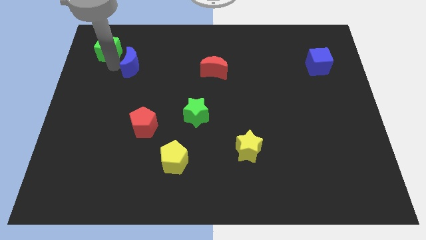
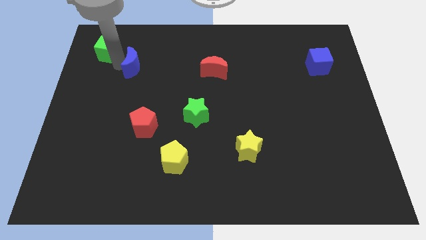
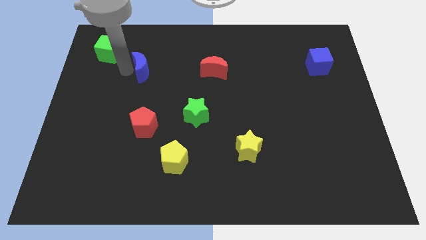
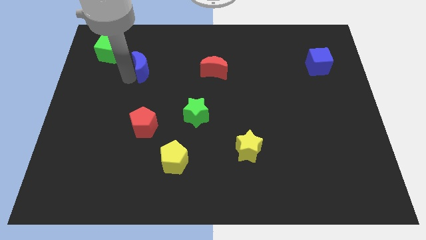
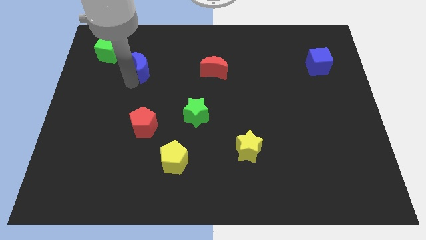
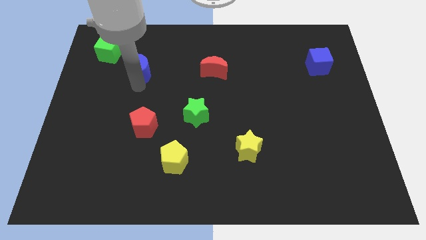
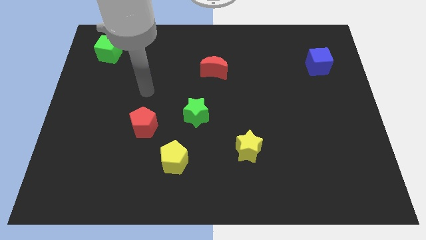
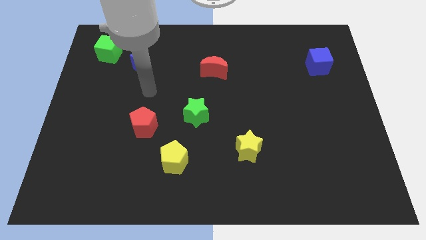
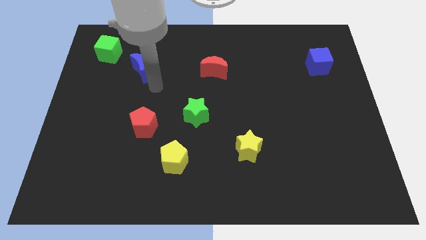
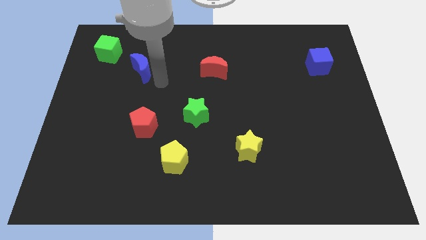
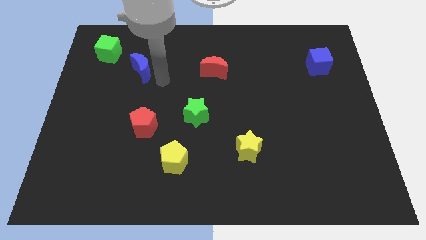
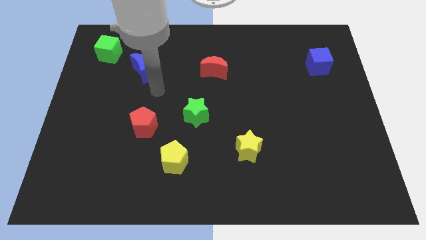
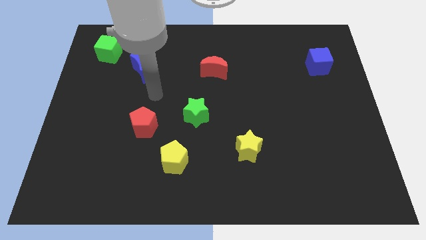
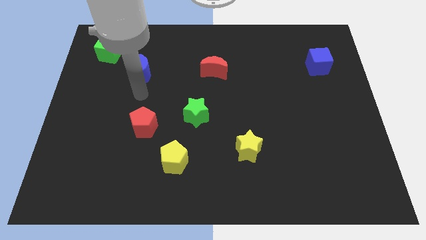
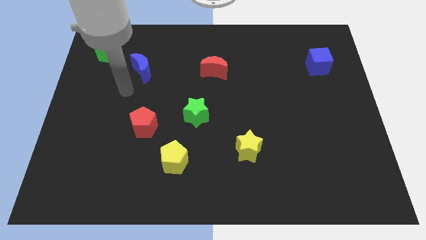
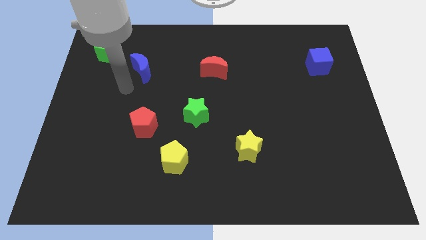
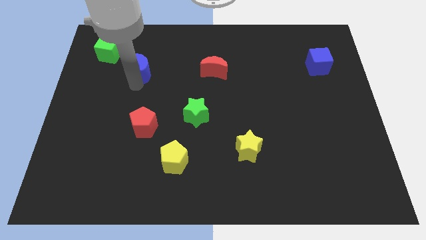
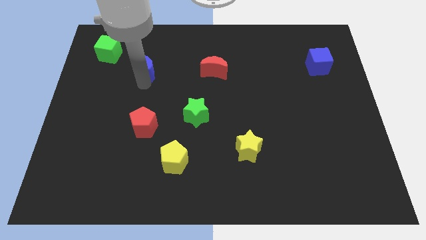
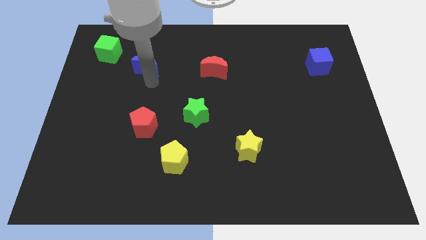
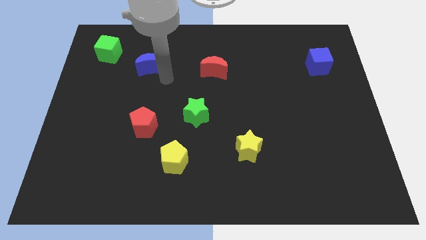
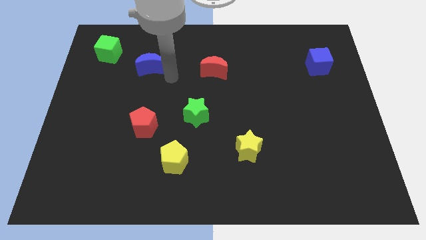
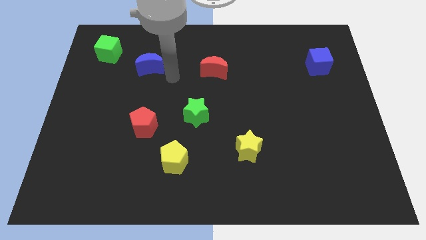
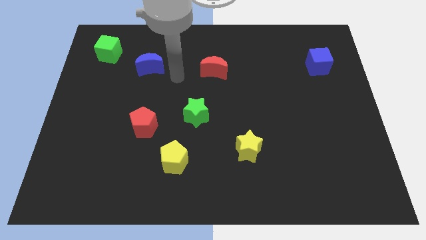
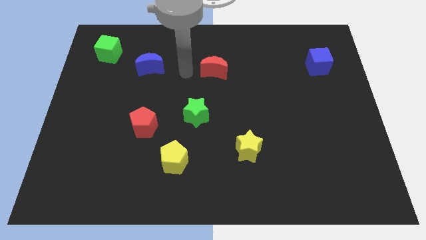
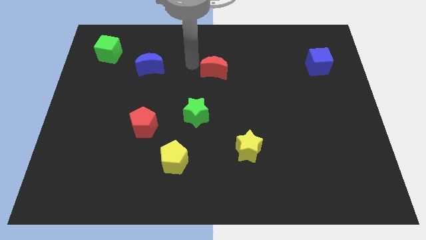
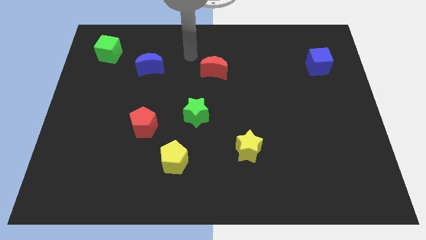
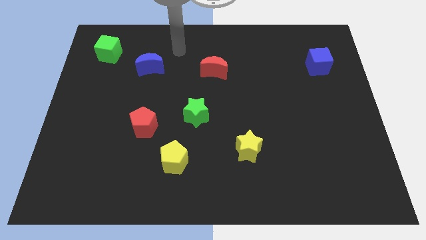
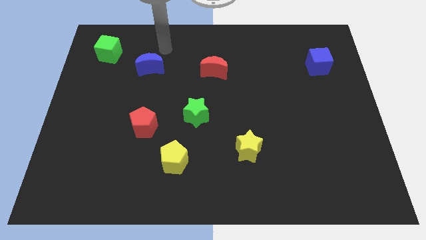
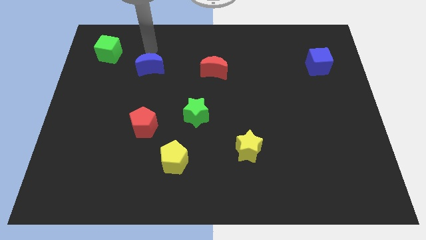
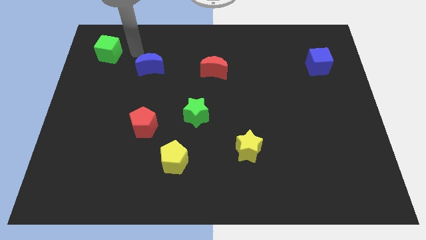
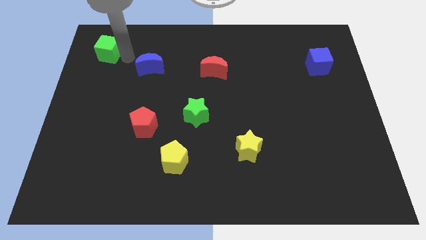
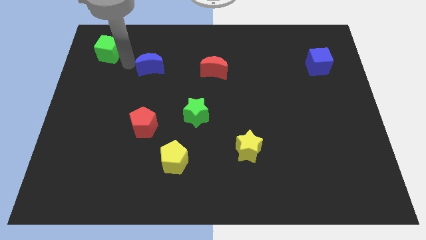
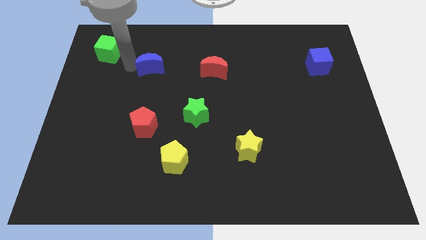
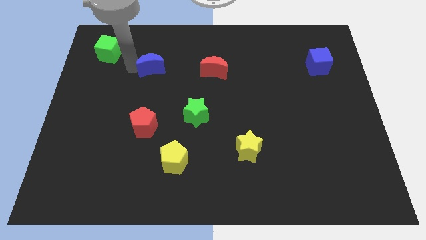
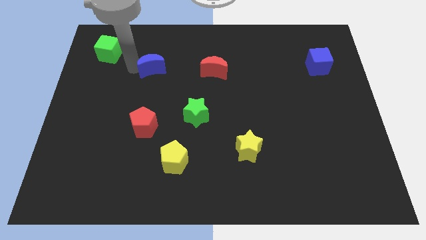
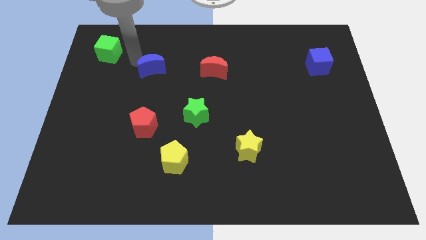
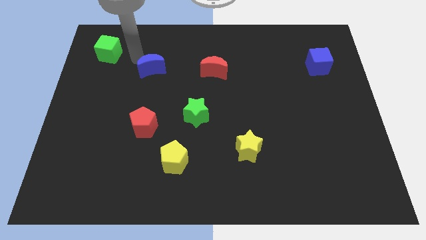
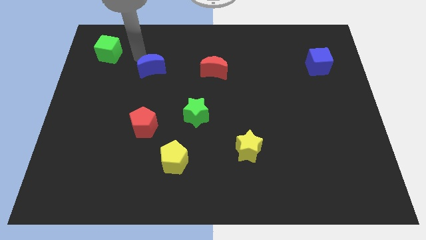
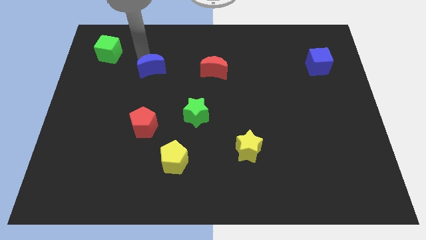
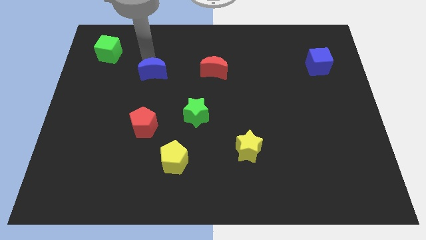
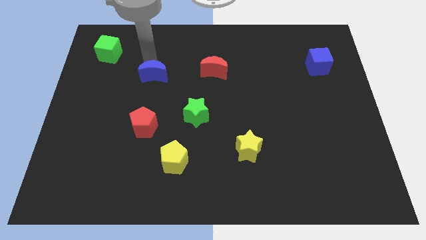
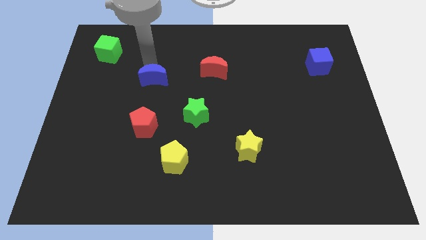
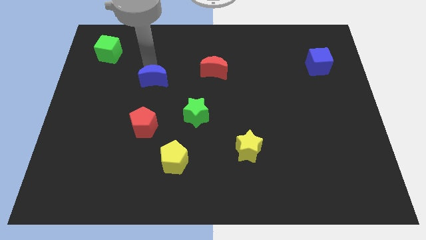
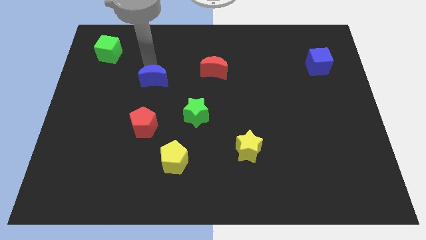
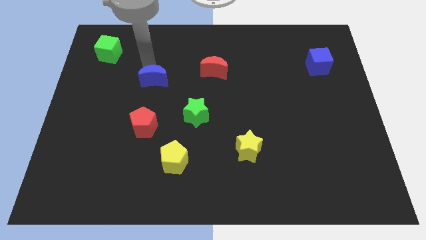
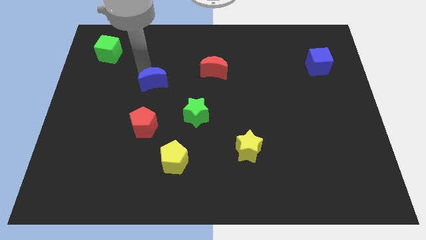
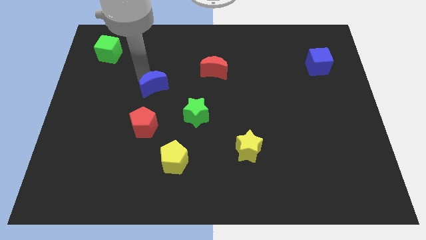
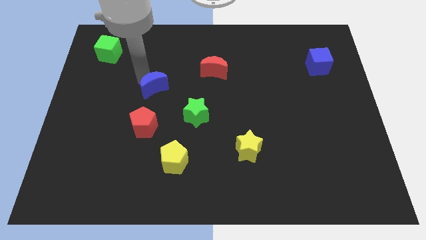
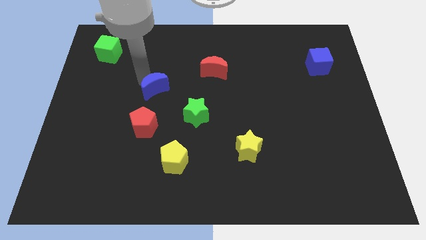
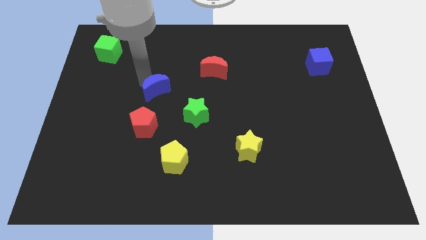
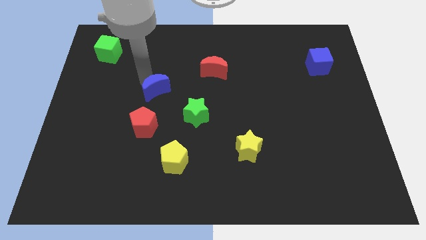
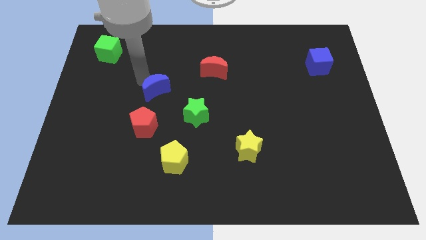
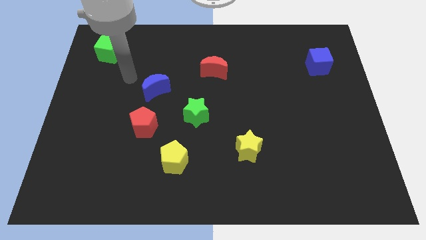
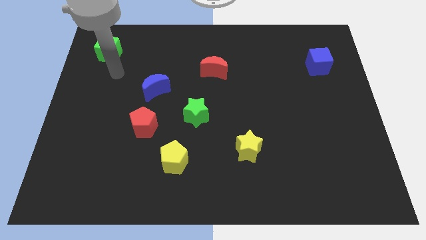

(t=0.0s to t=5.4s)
move the blue crescent towards the red pentagon

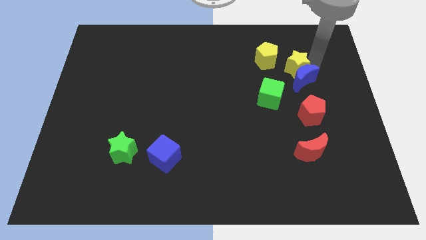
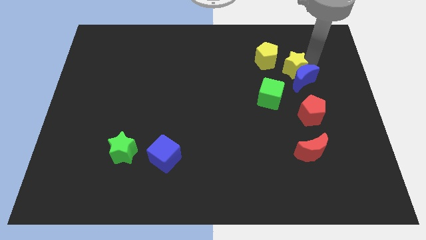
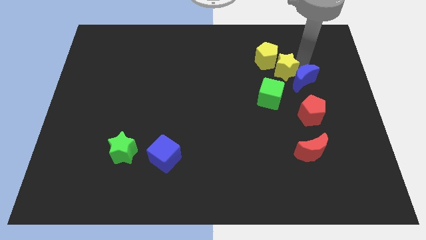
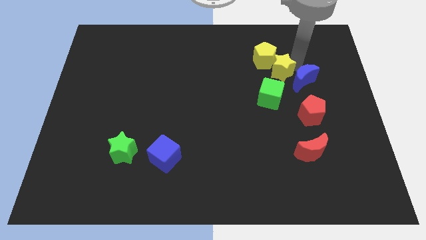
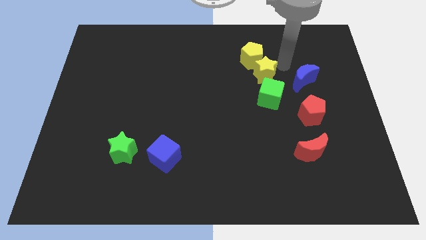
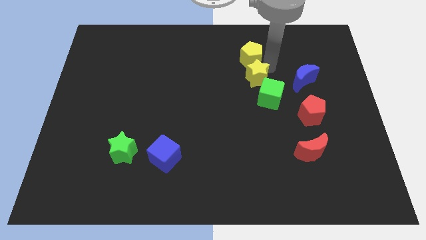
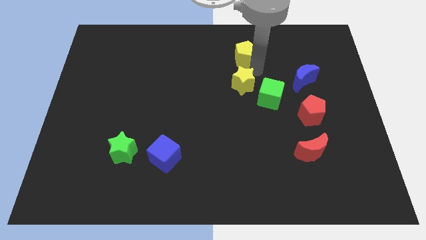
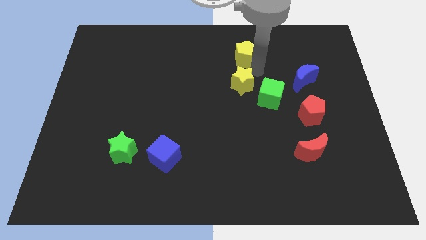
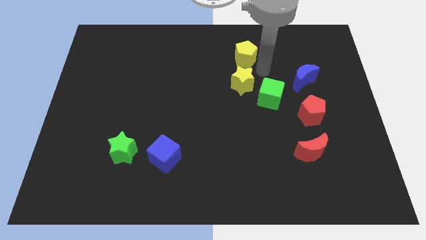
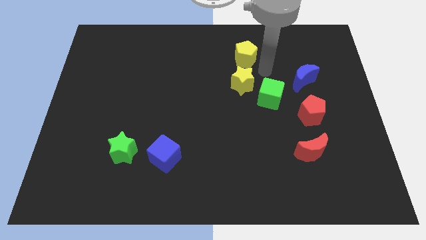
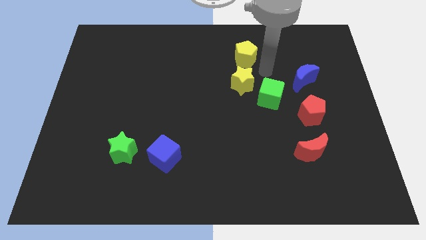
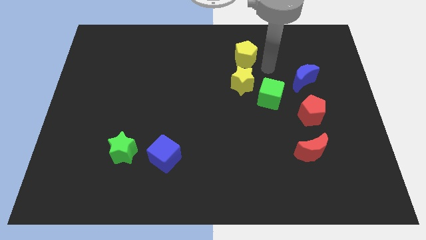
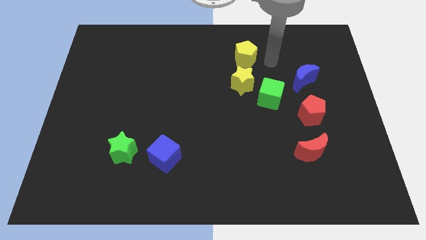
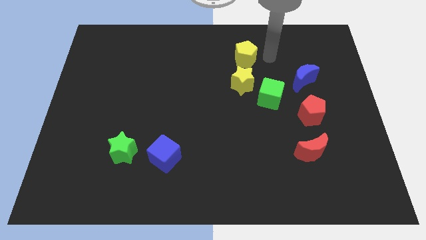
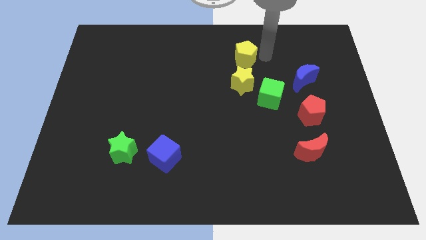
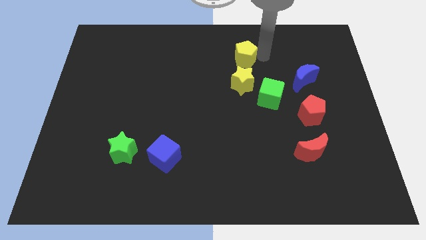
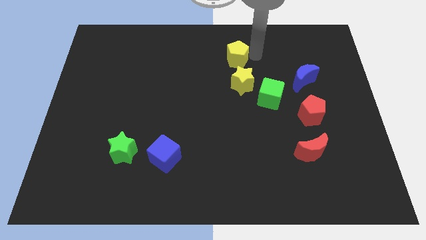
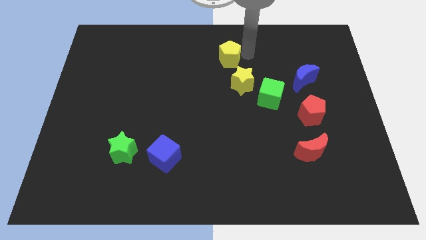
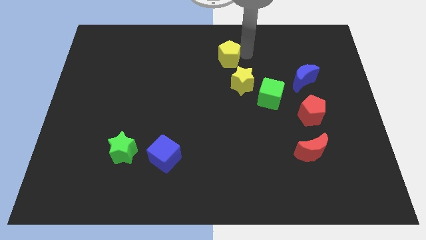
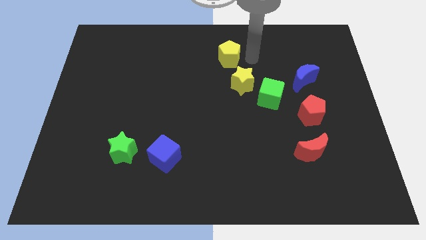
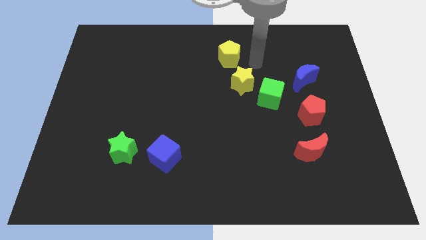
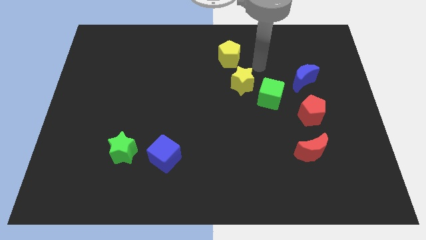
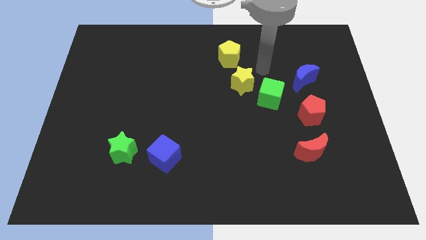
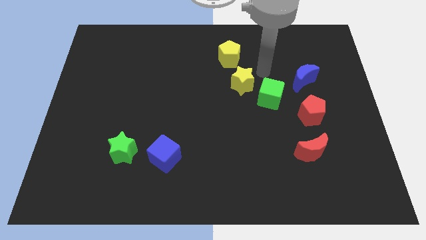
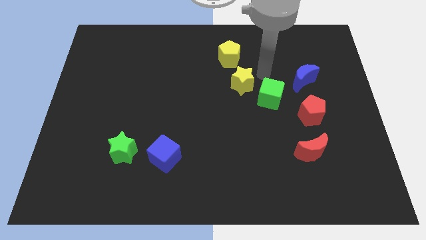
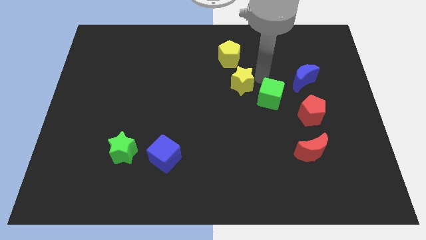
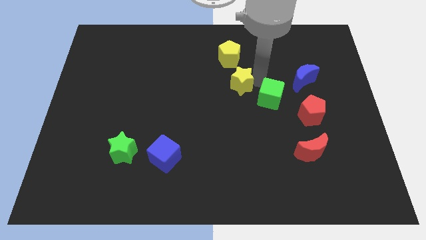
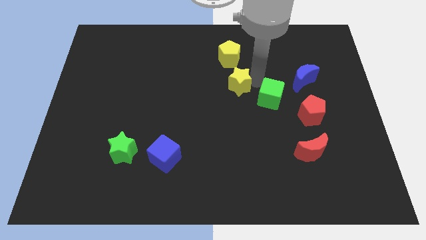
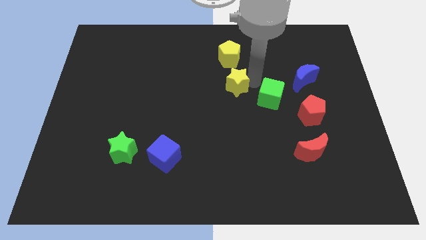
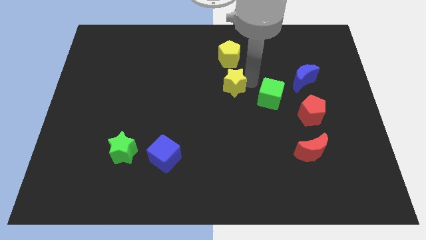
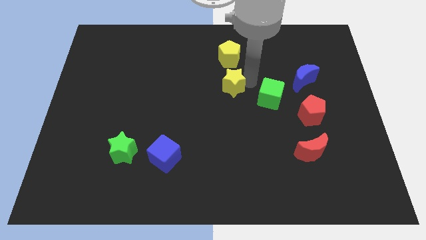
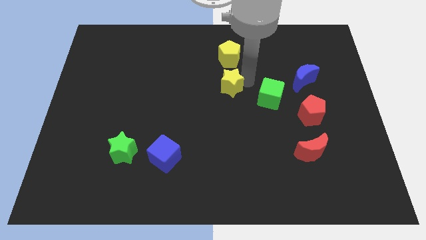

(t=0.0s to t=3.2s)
push the yellow blocks towards the center of the board

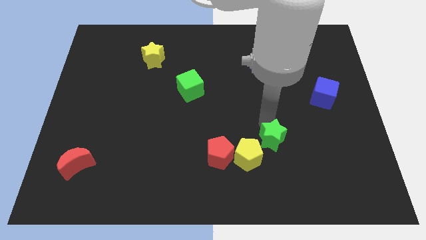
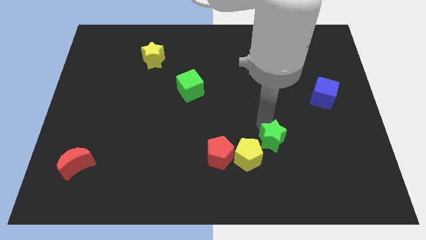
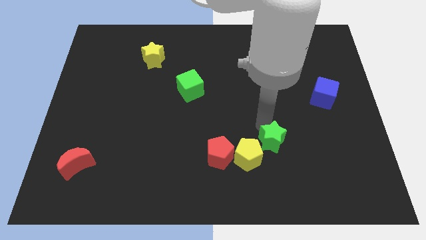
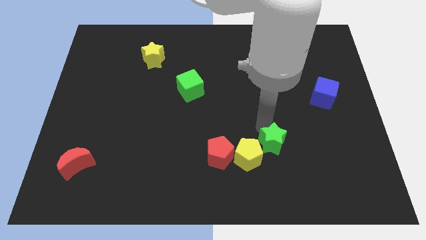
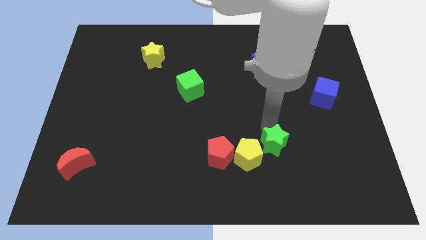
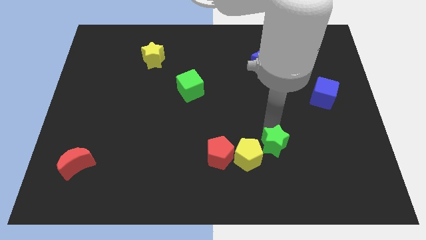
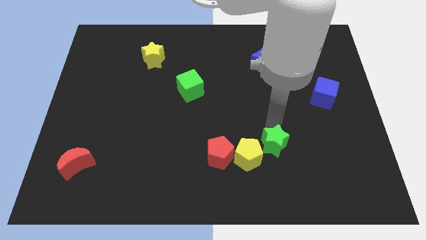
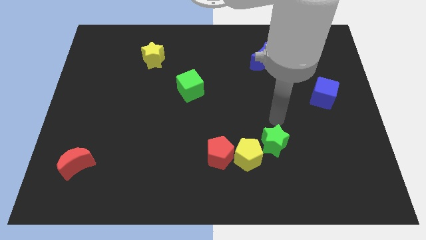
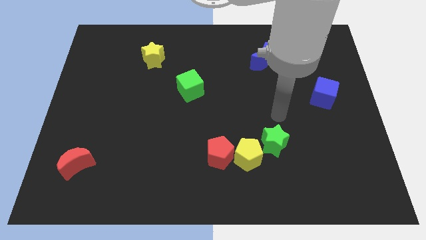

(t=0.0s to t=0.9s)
place the green star towards the top right side of the yellow pentagon
